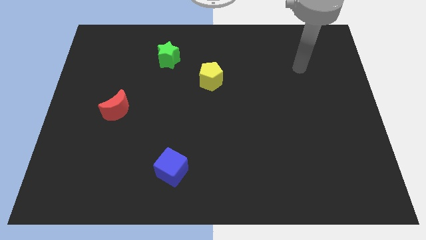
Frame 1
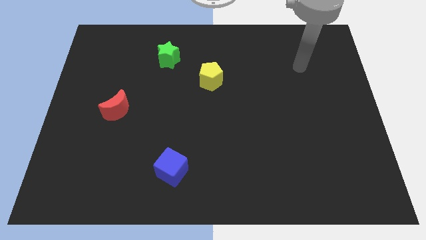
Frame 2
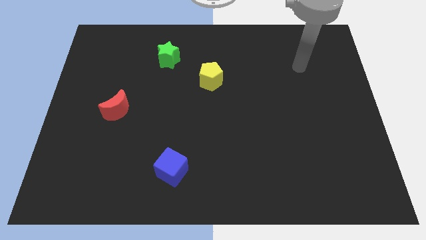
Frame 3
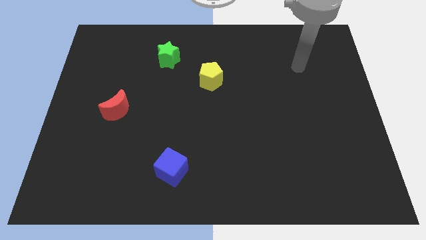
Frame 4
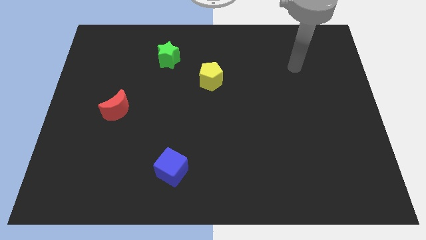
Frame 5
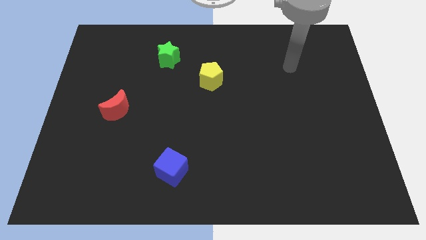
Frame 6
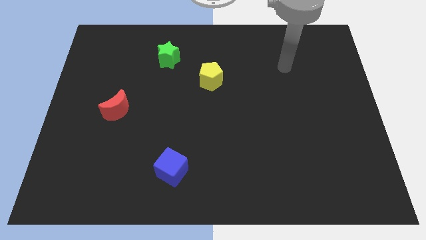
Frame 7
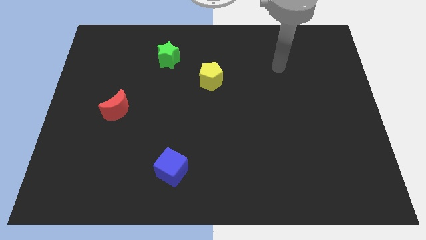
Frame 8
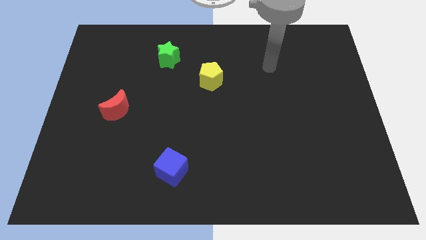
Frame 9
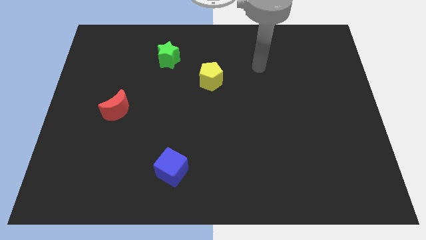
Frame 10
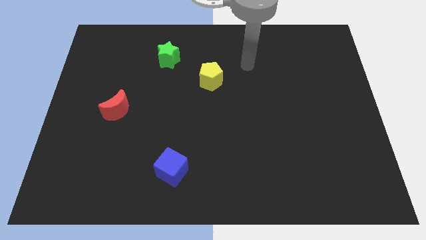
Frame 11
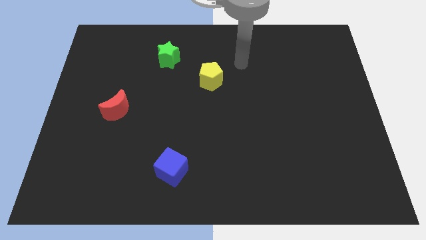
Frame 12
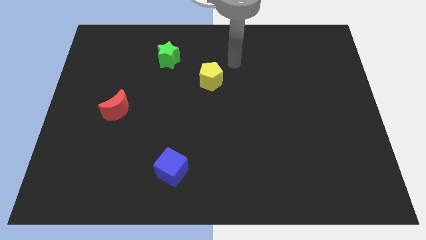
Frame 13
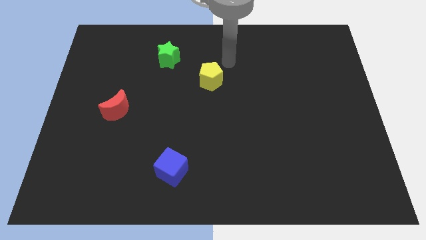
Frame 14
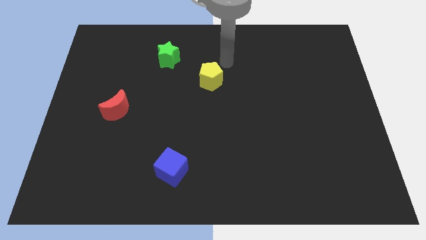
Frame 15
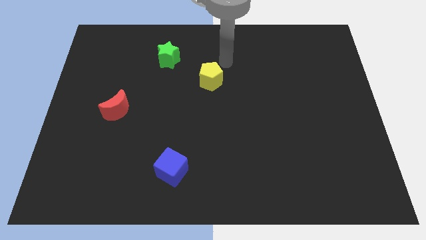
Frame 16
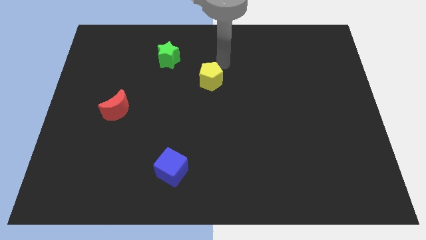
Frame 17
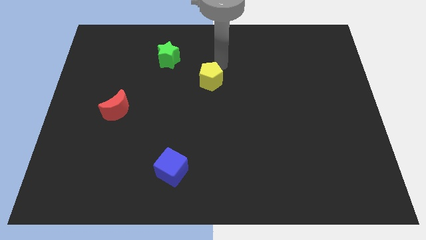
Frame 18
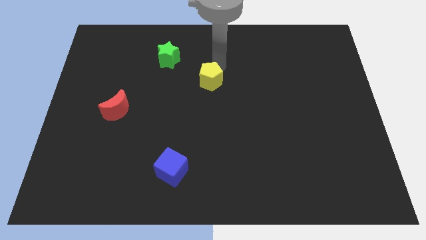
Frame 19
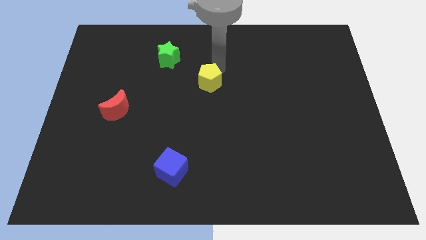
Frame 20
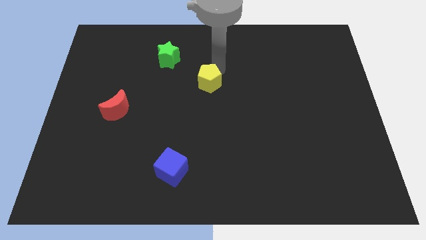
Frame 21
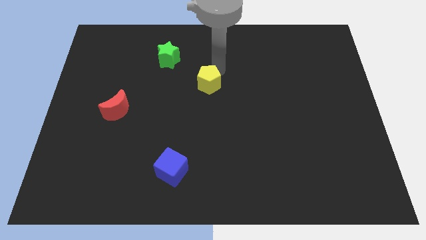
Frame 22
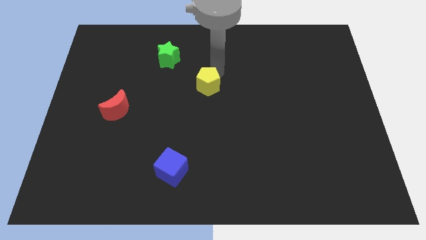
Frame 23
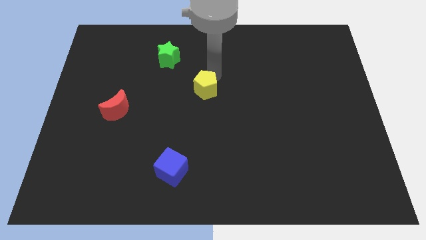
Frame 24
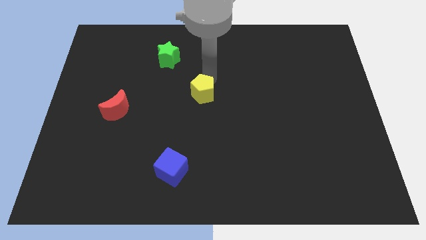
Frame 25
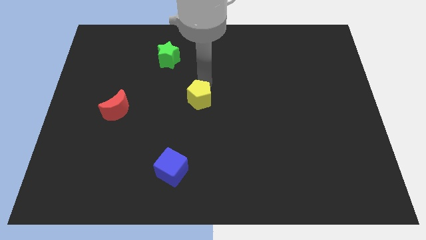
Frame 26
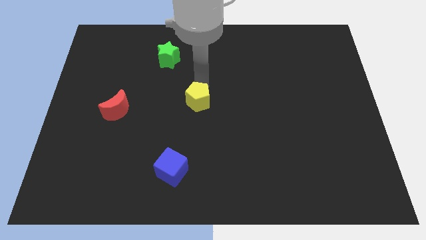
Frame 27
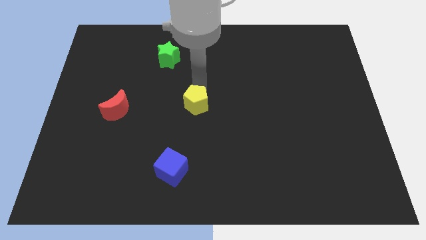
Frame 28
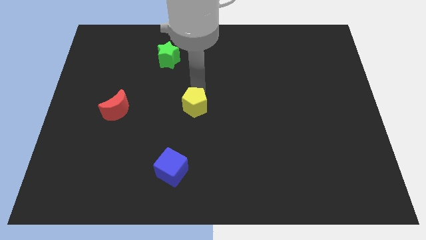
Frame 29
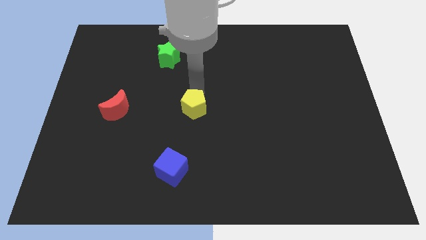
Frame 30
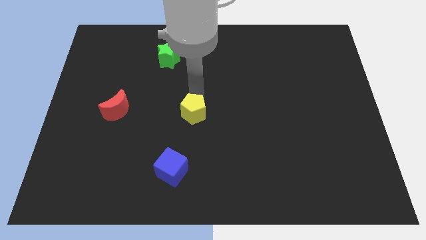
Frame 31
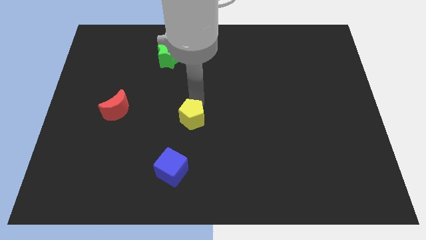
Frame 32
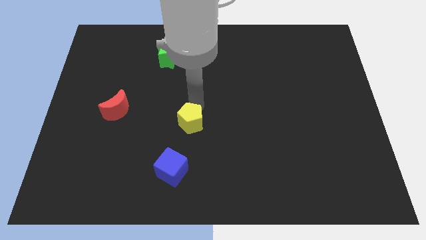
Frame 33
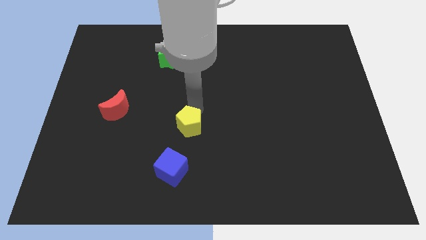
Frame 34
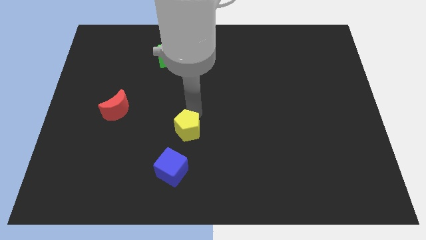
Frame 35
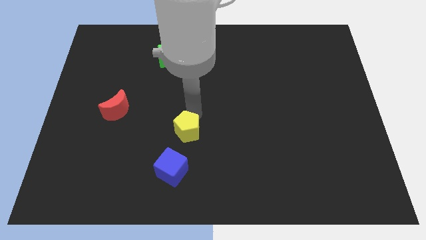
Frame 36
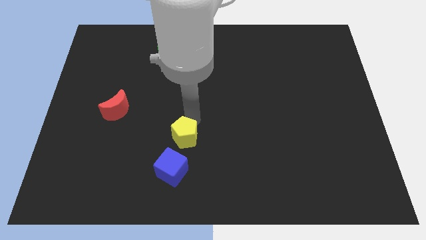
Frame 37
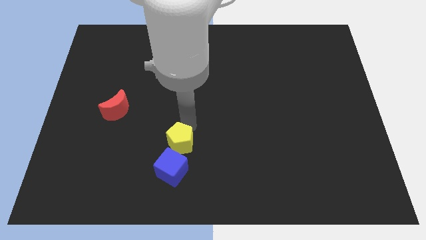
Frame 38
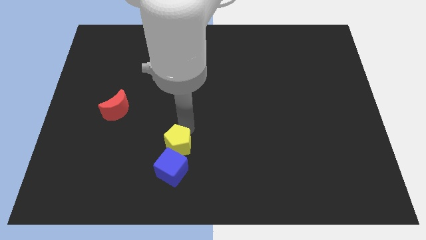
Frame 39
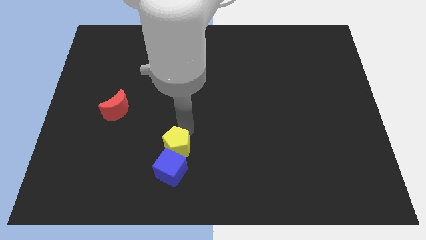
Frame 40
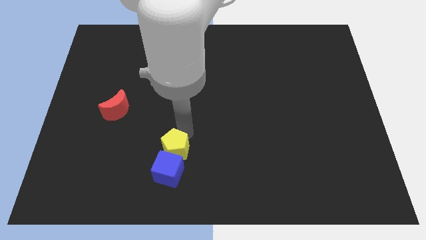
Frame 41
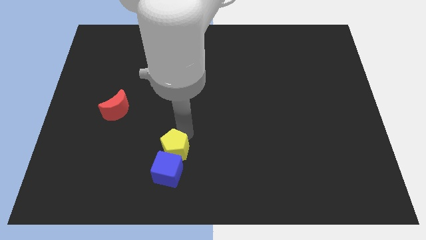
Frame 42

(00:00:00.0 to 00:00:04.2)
put the yellow pentagon towards the cube

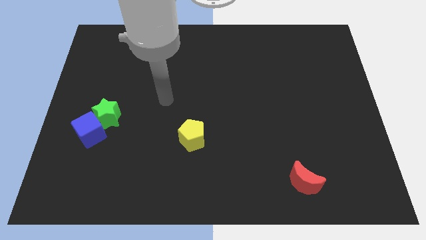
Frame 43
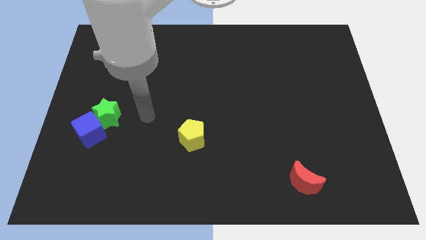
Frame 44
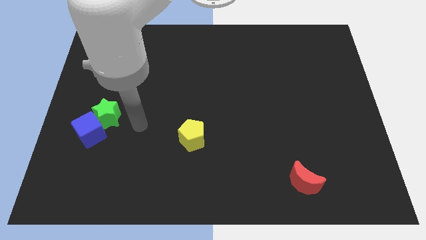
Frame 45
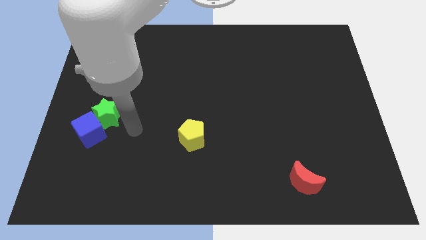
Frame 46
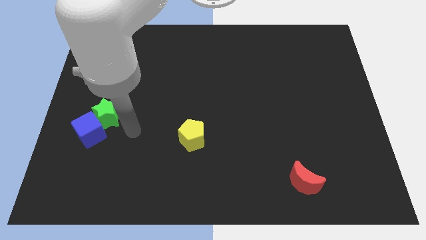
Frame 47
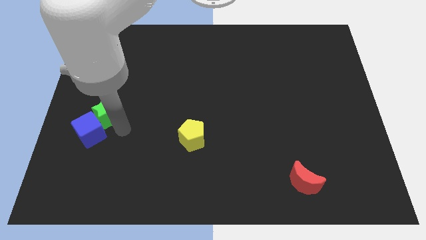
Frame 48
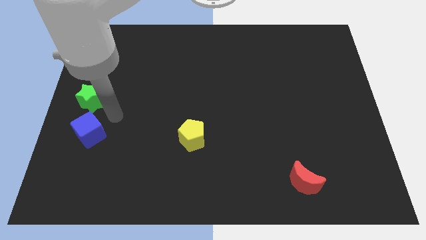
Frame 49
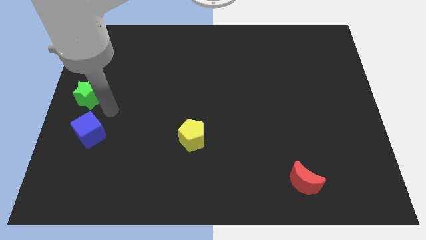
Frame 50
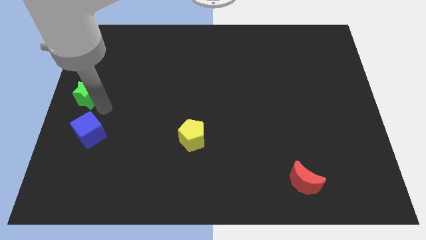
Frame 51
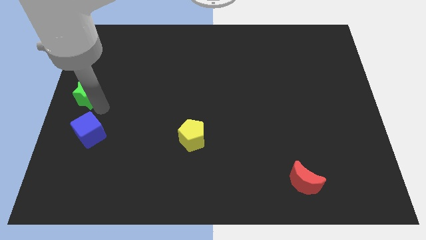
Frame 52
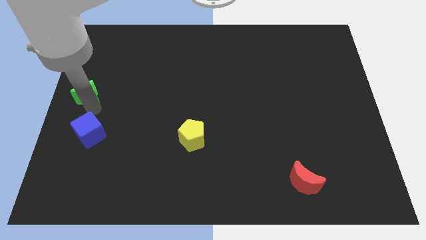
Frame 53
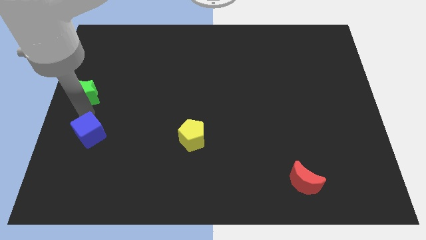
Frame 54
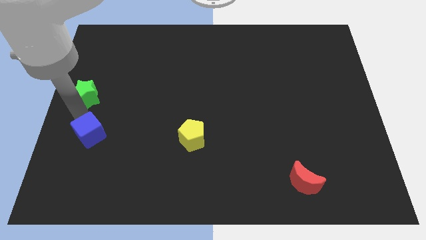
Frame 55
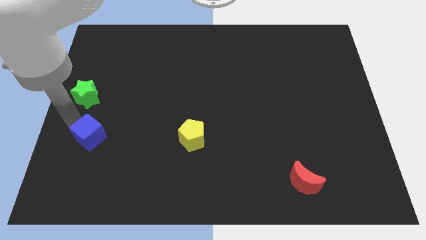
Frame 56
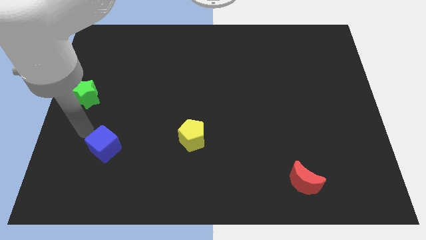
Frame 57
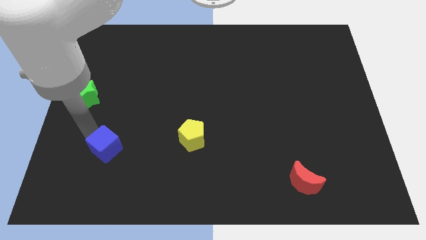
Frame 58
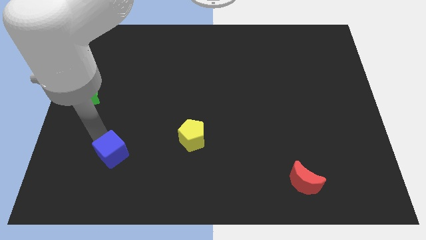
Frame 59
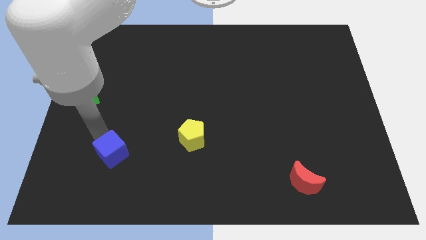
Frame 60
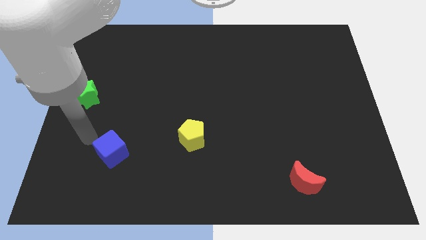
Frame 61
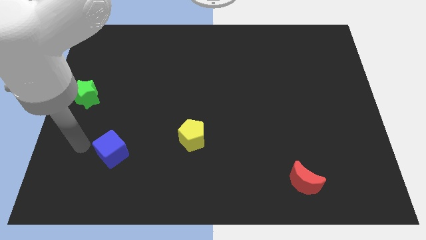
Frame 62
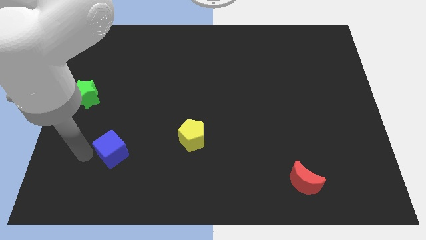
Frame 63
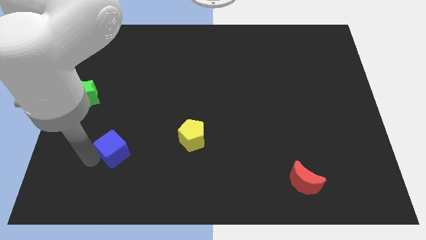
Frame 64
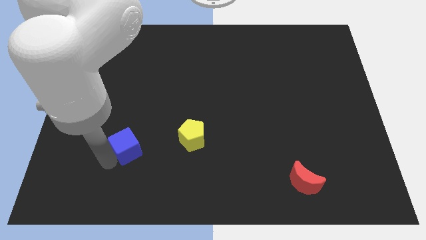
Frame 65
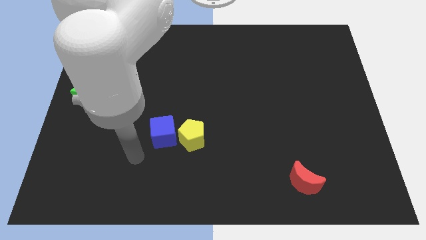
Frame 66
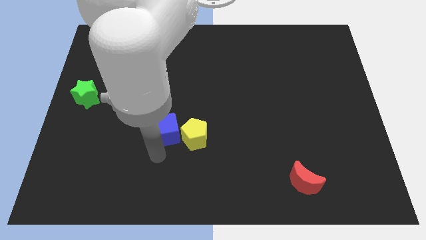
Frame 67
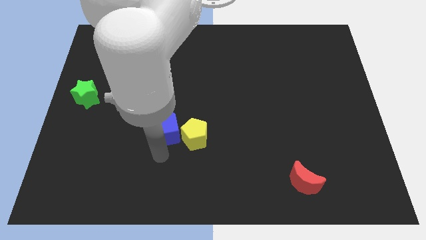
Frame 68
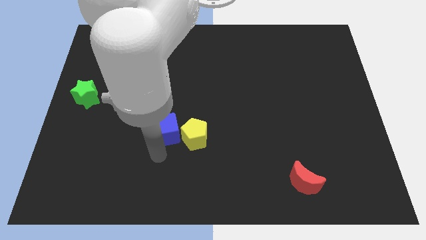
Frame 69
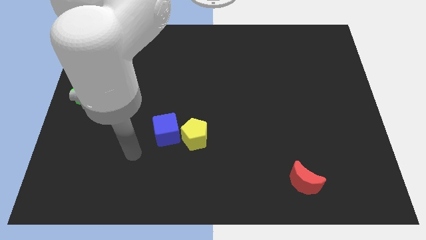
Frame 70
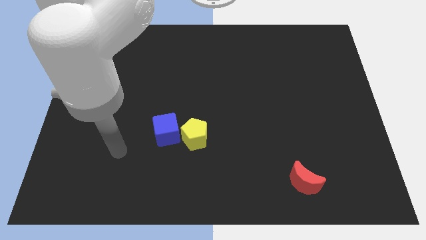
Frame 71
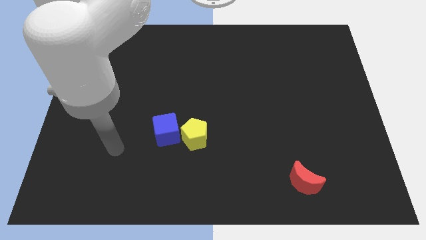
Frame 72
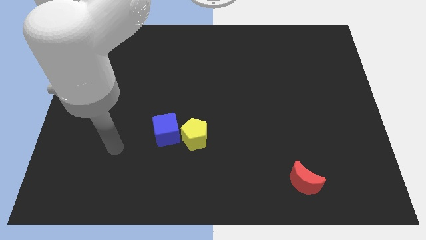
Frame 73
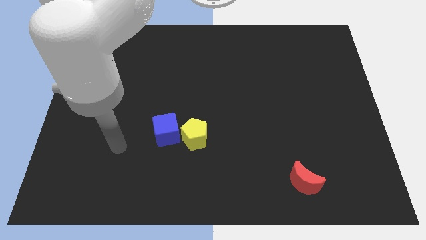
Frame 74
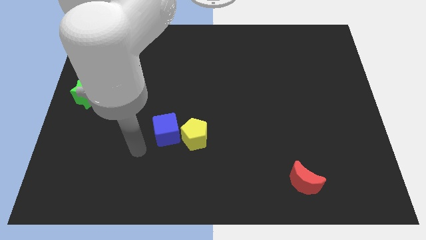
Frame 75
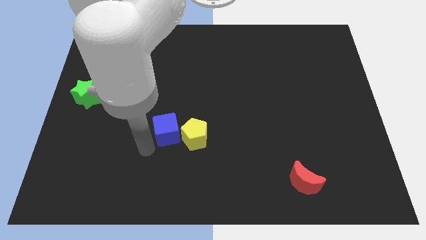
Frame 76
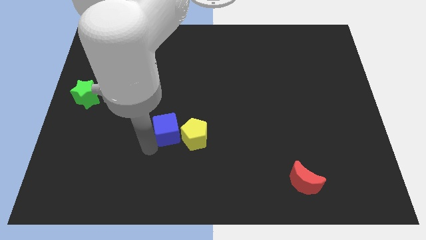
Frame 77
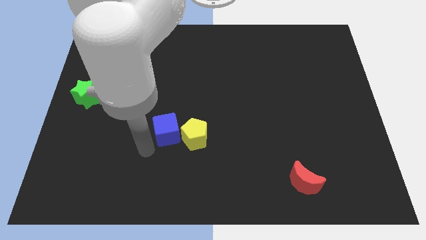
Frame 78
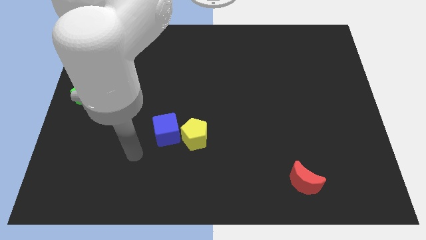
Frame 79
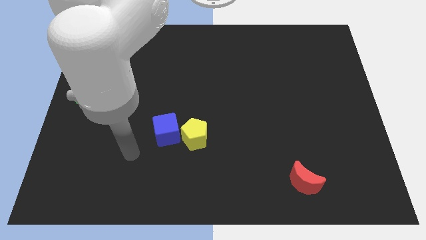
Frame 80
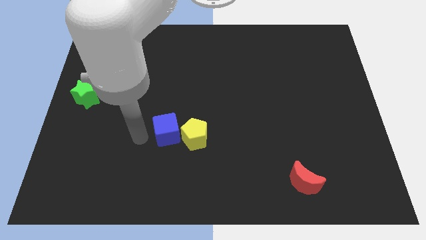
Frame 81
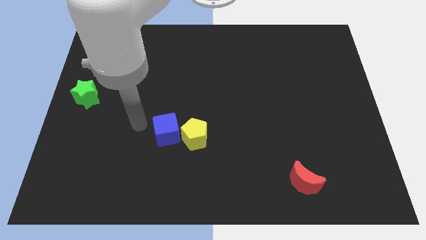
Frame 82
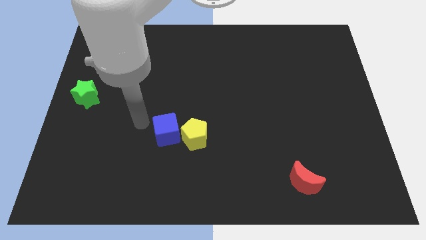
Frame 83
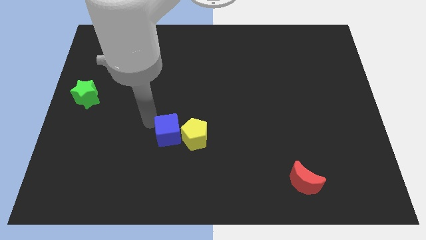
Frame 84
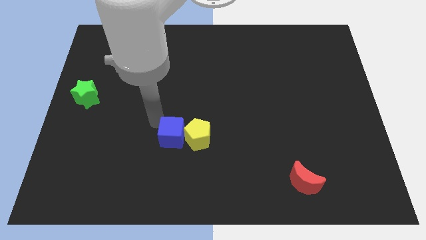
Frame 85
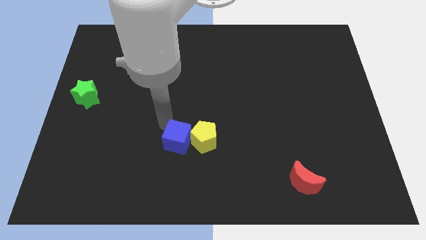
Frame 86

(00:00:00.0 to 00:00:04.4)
push the blue cube to the pentagon

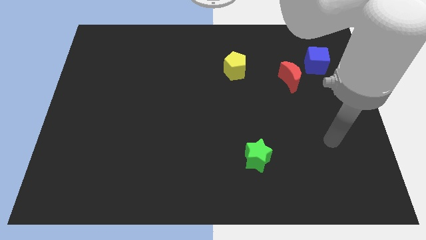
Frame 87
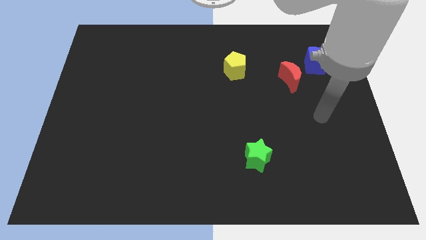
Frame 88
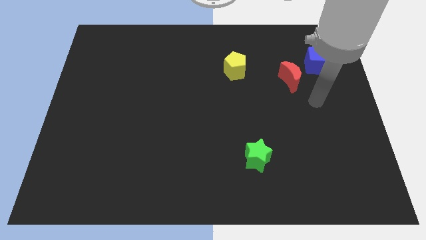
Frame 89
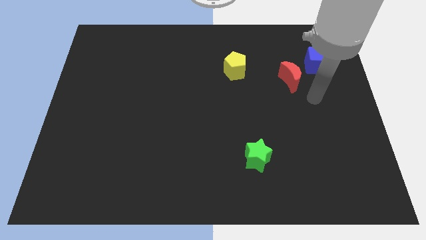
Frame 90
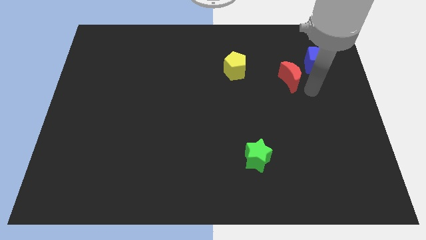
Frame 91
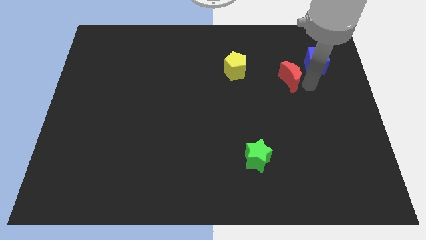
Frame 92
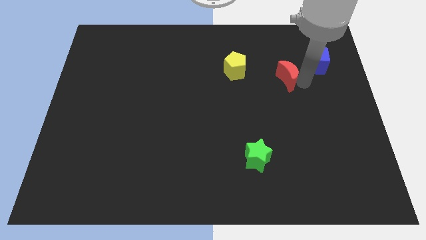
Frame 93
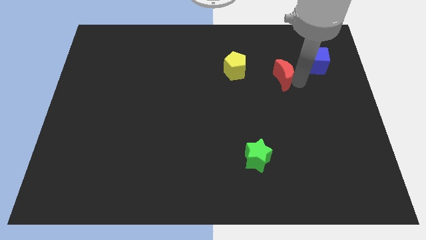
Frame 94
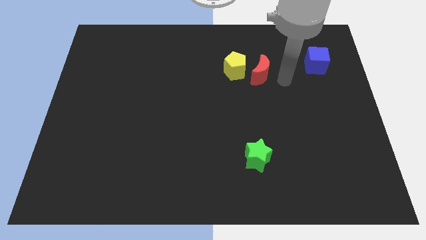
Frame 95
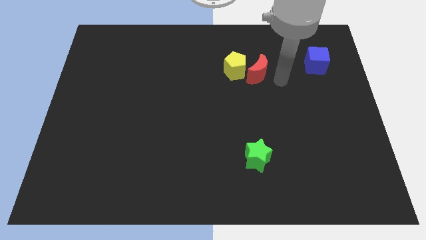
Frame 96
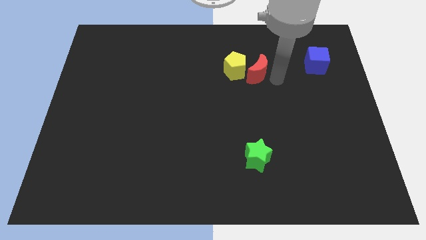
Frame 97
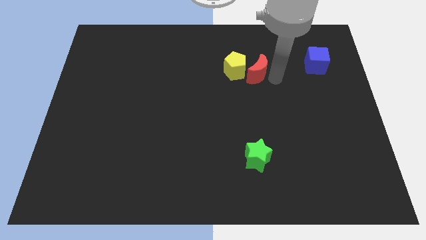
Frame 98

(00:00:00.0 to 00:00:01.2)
put the moon towards the pentagon
